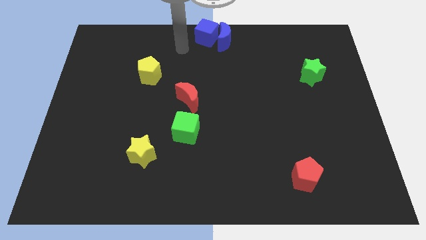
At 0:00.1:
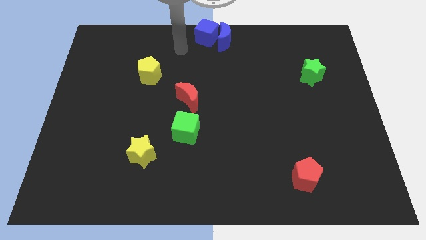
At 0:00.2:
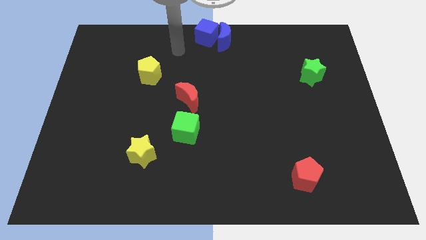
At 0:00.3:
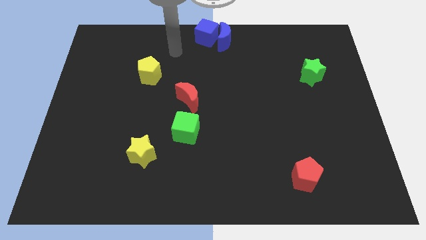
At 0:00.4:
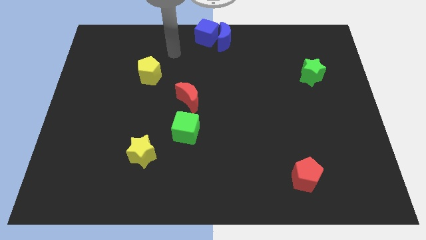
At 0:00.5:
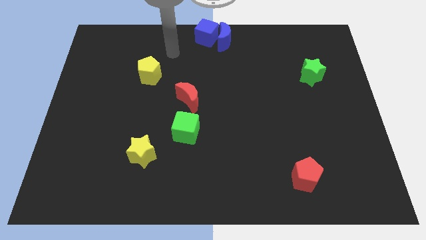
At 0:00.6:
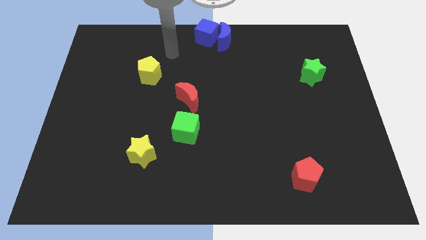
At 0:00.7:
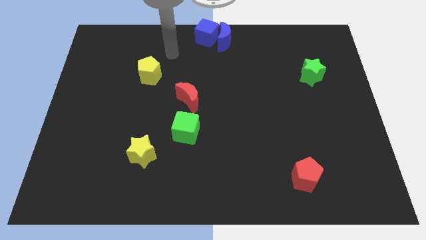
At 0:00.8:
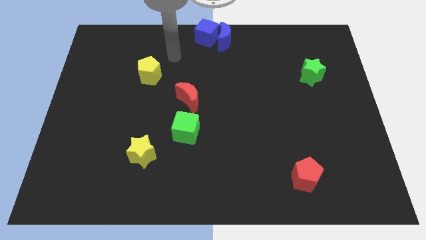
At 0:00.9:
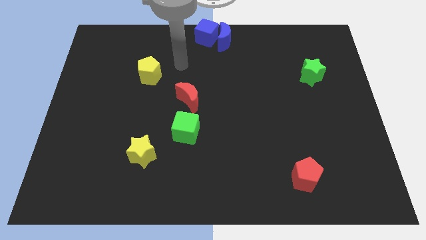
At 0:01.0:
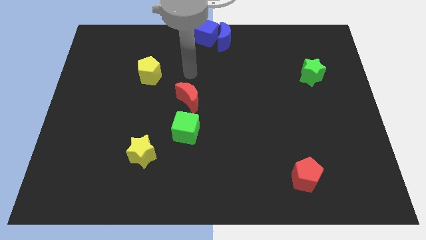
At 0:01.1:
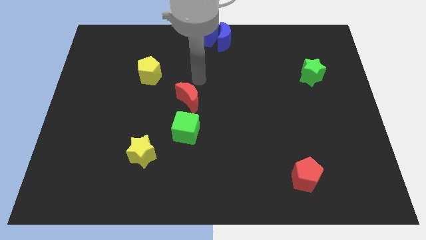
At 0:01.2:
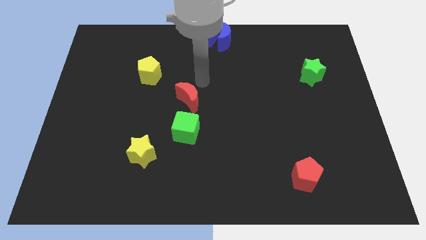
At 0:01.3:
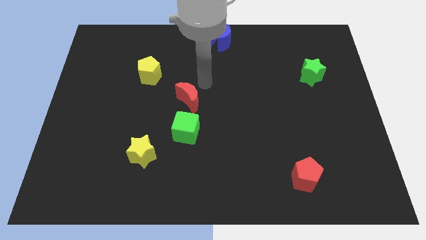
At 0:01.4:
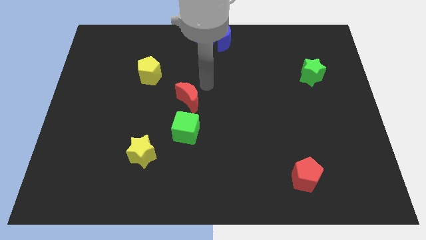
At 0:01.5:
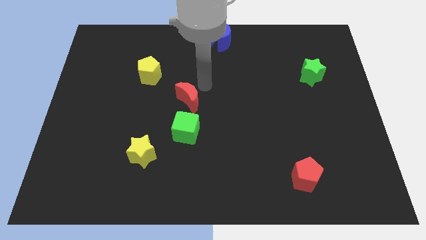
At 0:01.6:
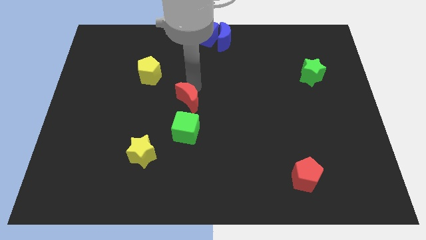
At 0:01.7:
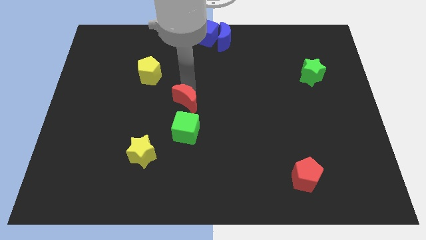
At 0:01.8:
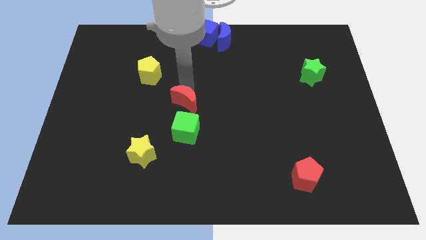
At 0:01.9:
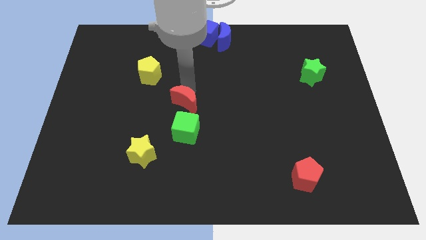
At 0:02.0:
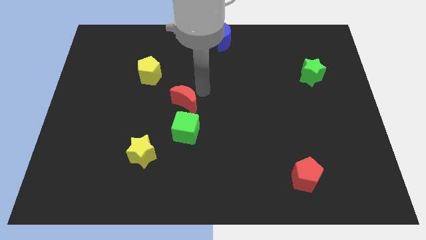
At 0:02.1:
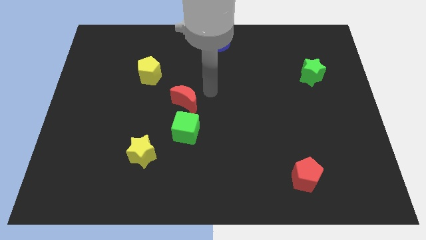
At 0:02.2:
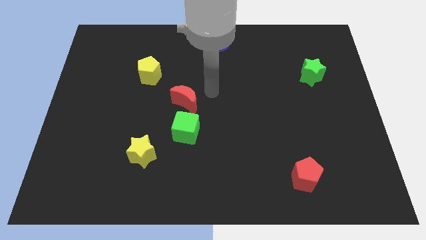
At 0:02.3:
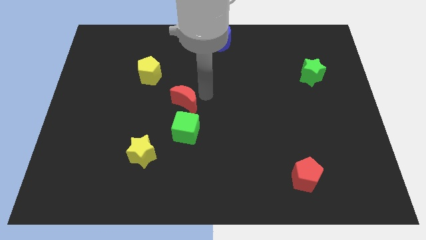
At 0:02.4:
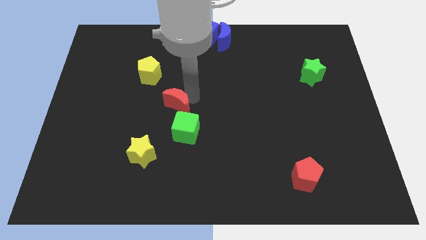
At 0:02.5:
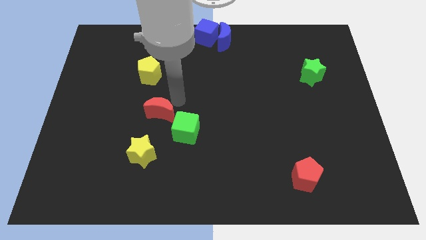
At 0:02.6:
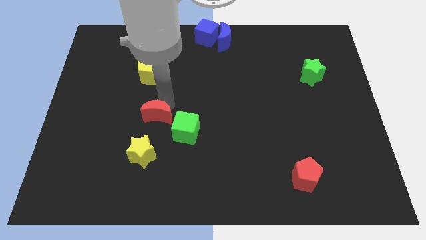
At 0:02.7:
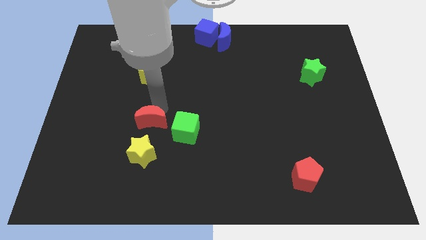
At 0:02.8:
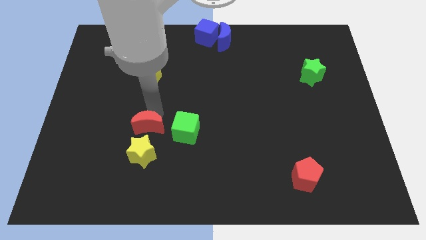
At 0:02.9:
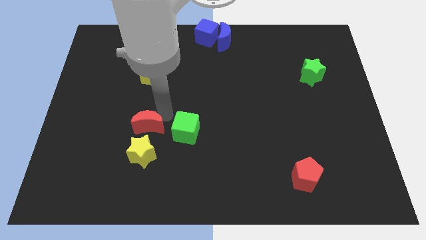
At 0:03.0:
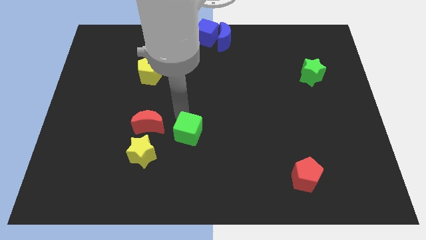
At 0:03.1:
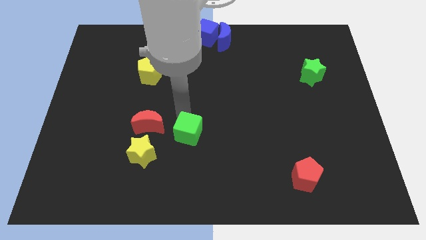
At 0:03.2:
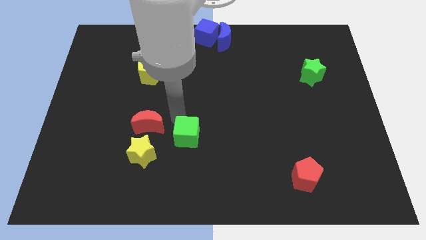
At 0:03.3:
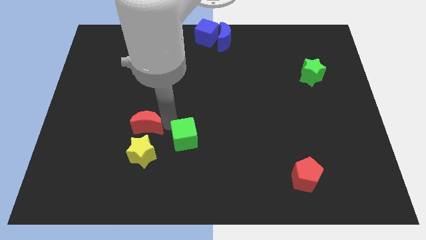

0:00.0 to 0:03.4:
put the red crescent at the top side of the yellow star

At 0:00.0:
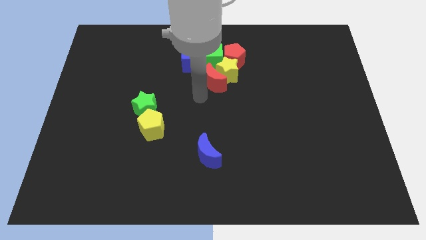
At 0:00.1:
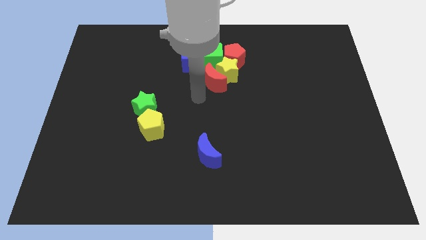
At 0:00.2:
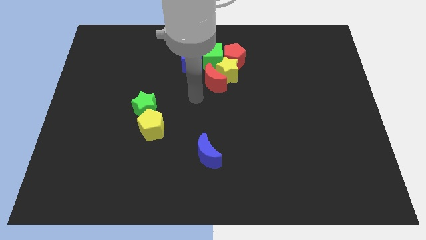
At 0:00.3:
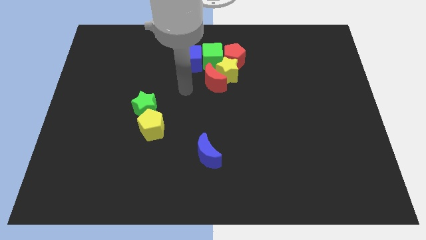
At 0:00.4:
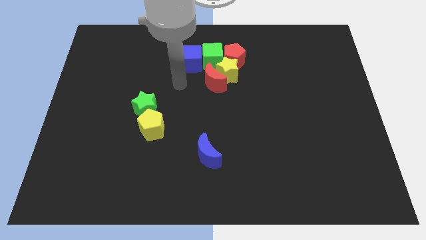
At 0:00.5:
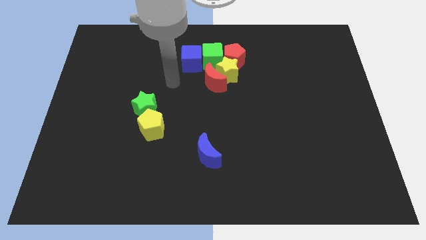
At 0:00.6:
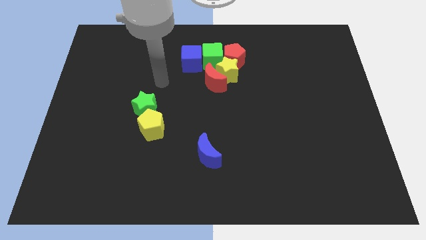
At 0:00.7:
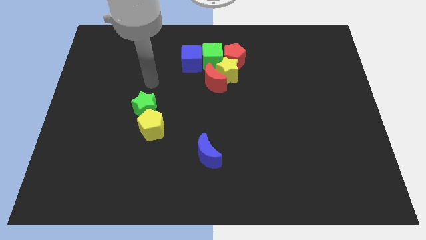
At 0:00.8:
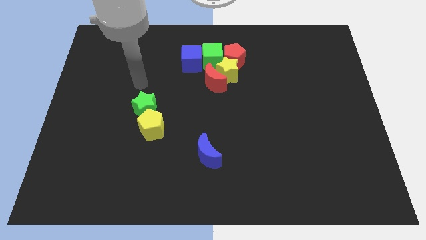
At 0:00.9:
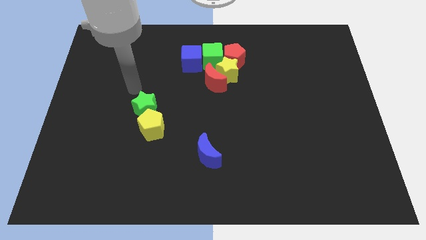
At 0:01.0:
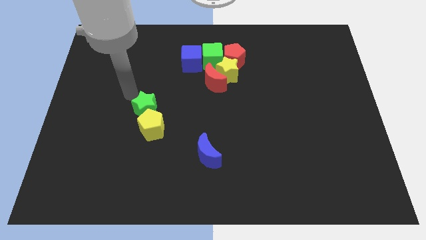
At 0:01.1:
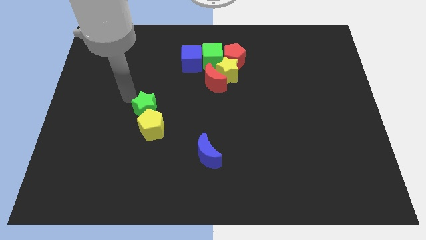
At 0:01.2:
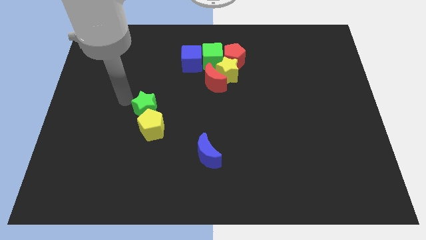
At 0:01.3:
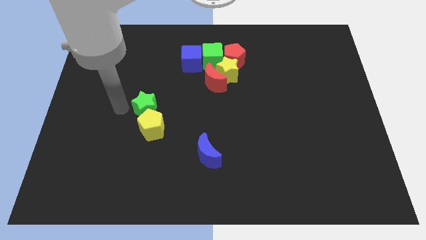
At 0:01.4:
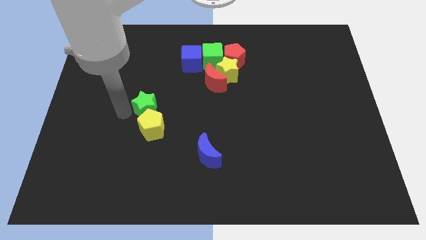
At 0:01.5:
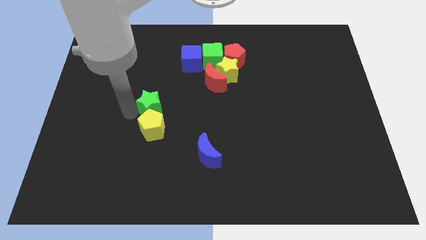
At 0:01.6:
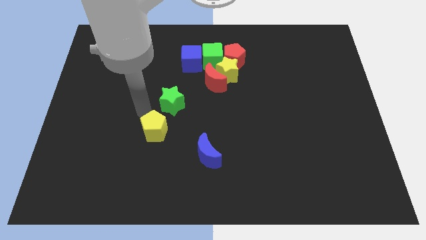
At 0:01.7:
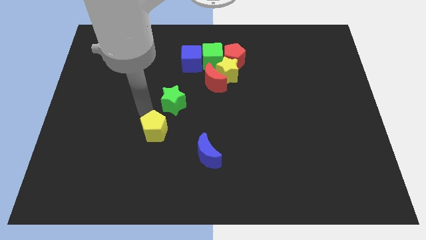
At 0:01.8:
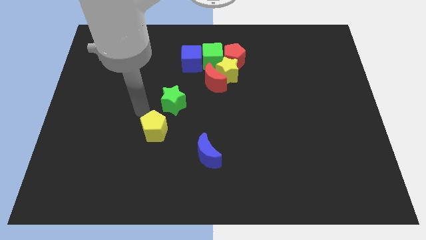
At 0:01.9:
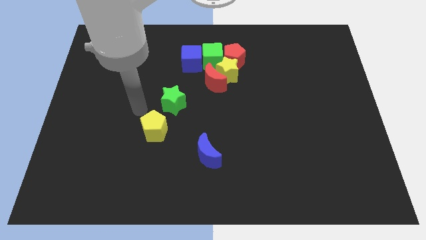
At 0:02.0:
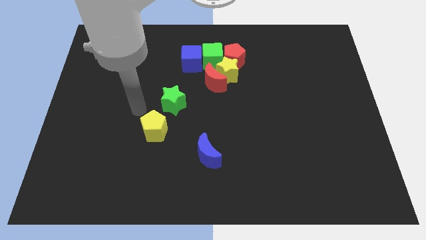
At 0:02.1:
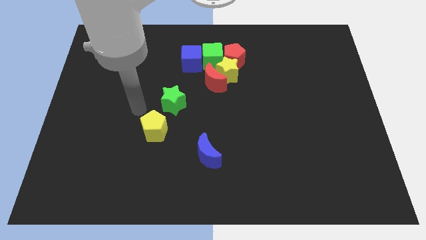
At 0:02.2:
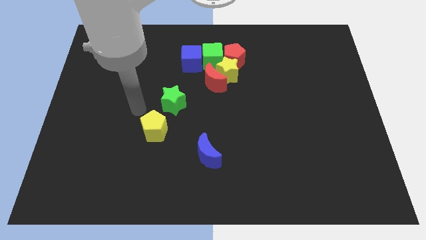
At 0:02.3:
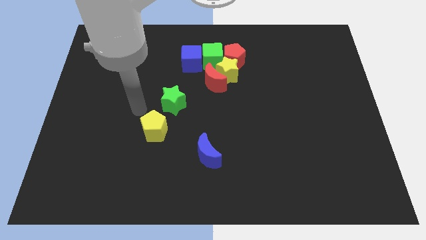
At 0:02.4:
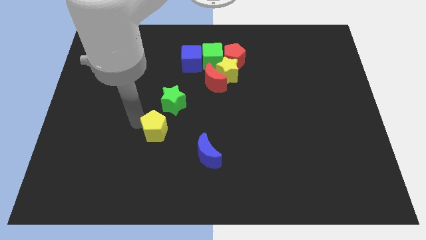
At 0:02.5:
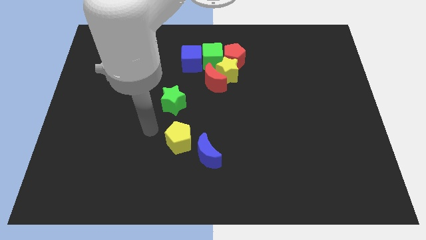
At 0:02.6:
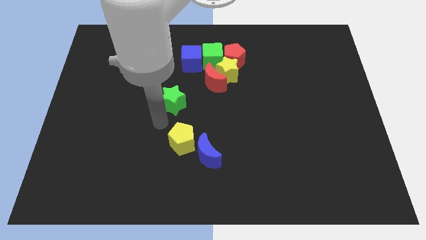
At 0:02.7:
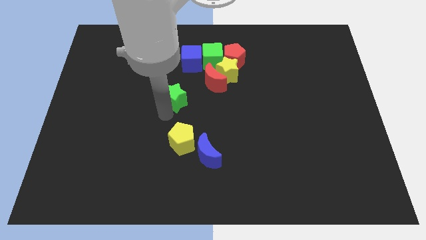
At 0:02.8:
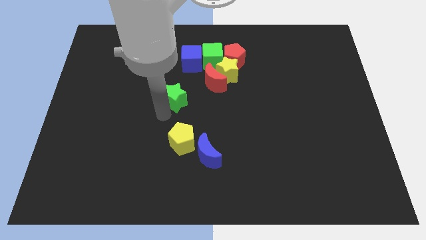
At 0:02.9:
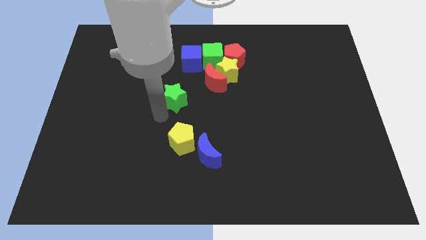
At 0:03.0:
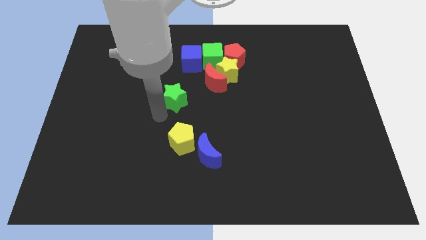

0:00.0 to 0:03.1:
separate the green star from the yellow pentagon

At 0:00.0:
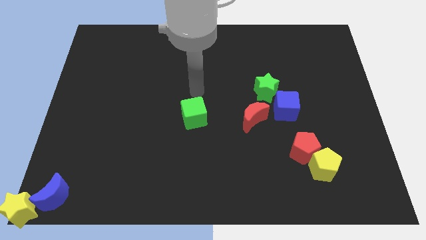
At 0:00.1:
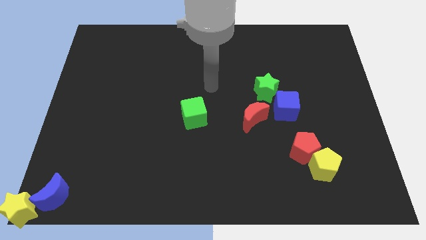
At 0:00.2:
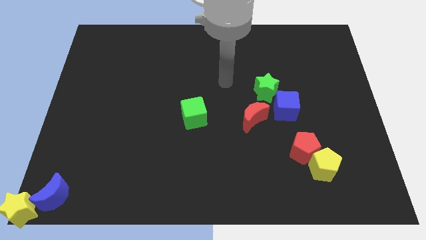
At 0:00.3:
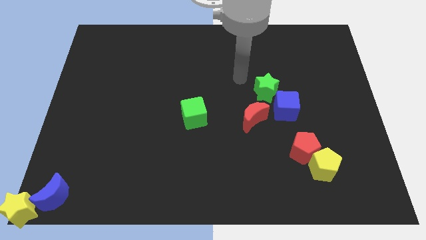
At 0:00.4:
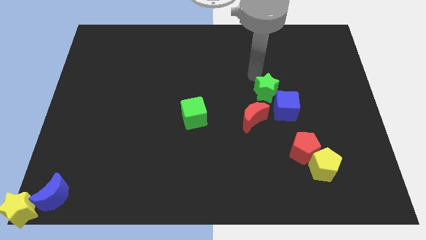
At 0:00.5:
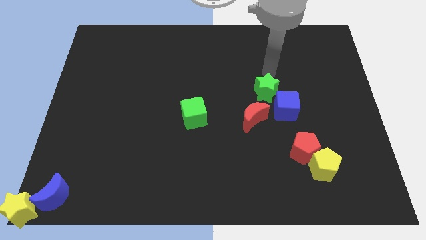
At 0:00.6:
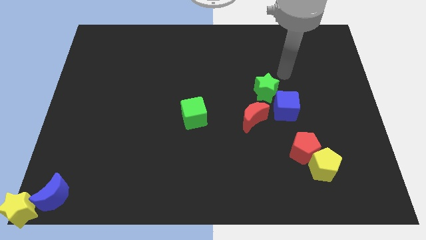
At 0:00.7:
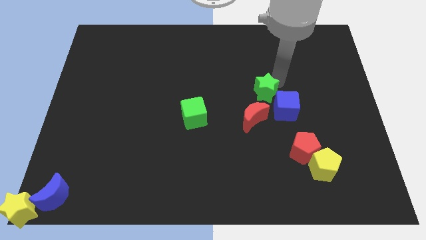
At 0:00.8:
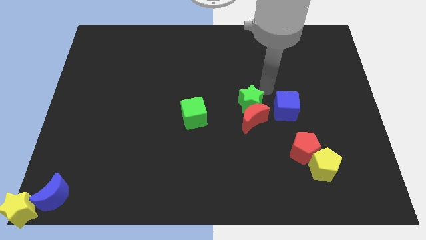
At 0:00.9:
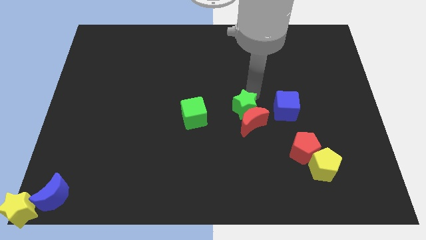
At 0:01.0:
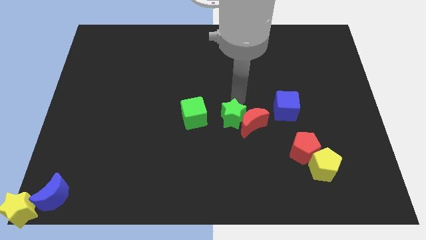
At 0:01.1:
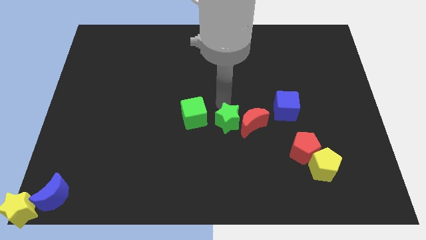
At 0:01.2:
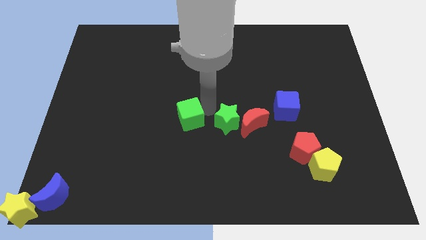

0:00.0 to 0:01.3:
put the green star in between the red moon and the green cube

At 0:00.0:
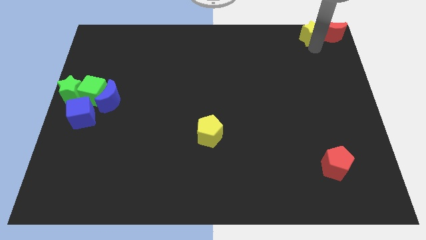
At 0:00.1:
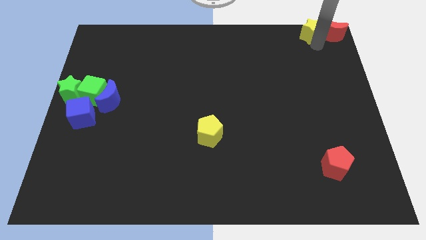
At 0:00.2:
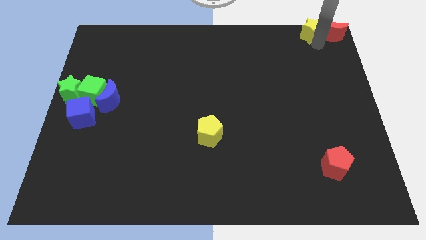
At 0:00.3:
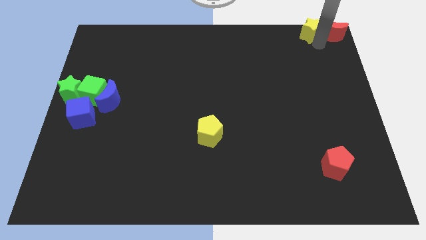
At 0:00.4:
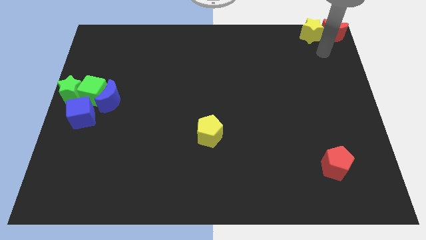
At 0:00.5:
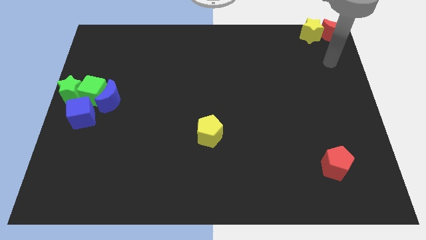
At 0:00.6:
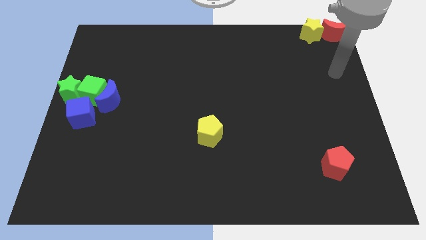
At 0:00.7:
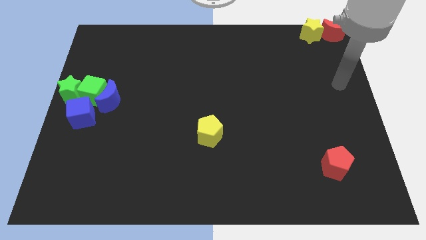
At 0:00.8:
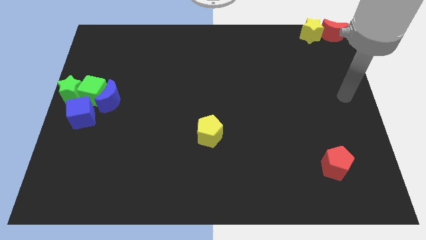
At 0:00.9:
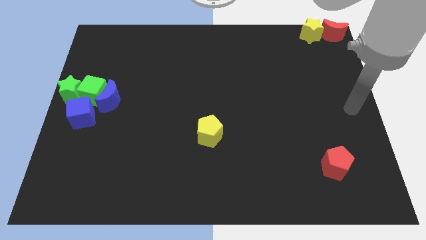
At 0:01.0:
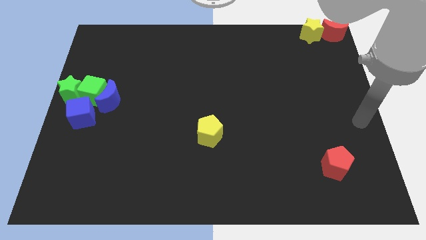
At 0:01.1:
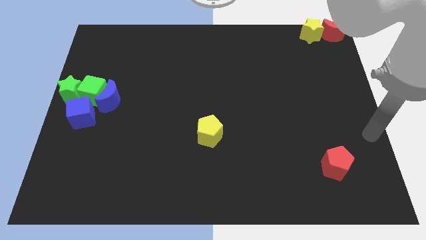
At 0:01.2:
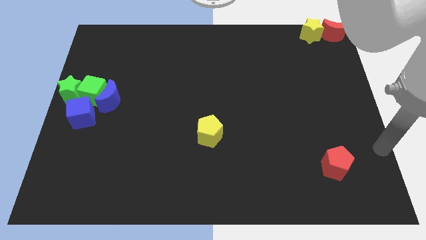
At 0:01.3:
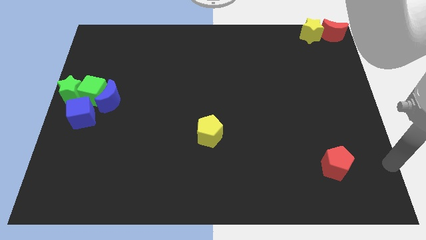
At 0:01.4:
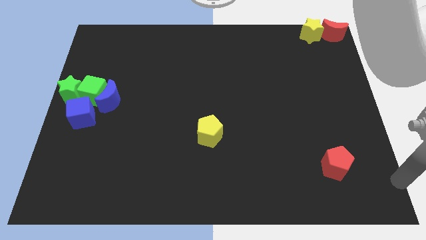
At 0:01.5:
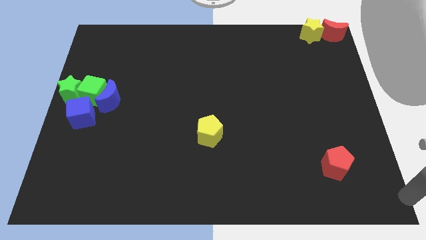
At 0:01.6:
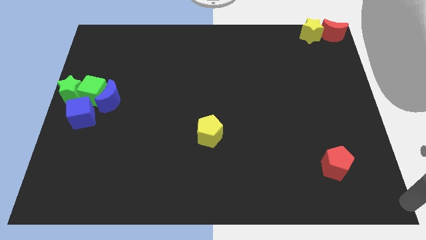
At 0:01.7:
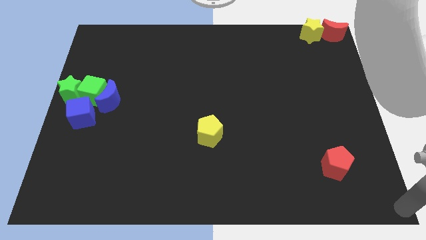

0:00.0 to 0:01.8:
move the arm to the bottom right of the board
